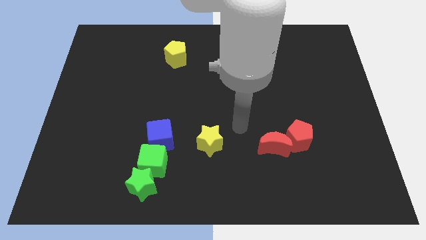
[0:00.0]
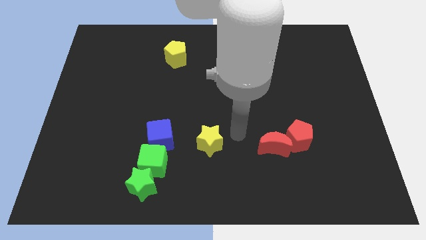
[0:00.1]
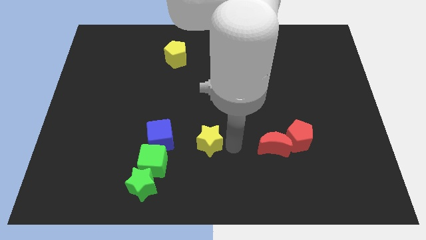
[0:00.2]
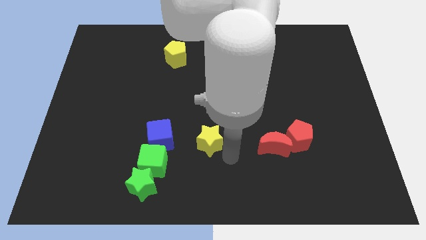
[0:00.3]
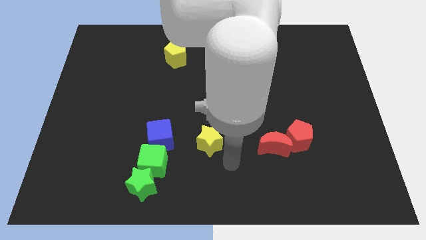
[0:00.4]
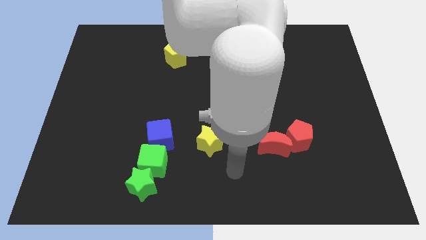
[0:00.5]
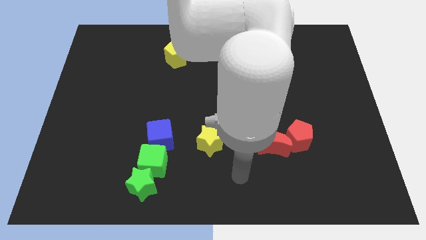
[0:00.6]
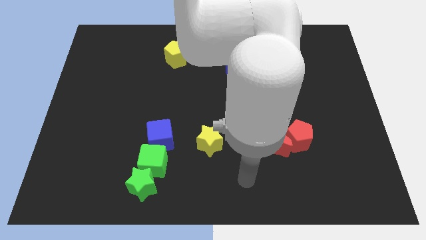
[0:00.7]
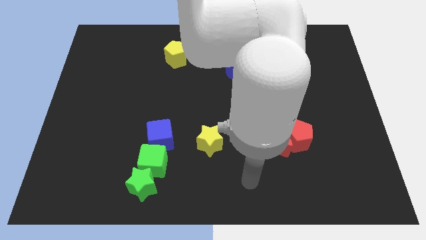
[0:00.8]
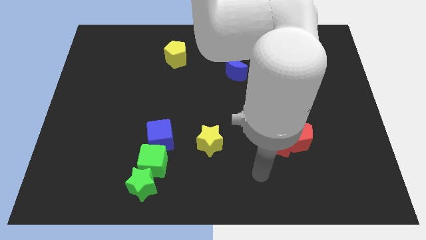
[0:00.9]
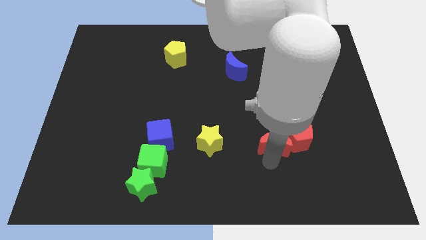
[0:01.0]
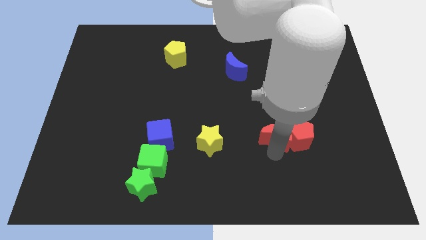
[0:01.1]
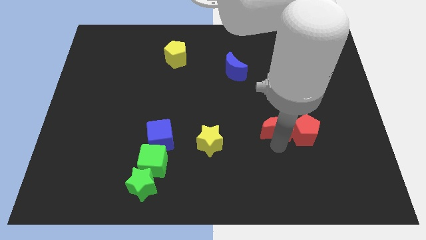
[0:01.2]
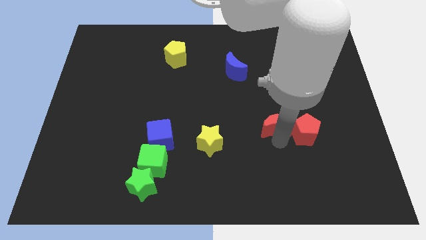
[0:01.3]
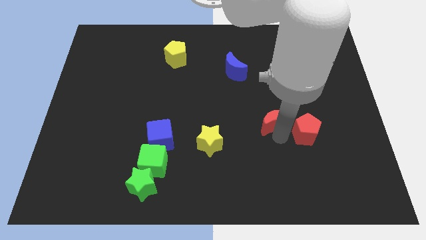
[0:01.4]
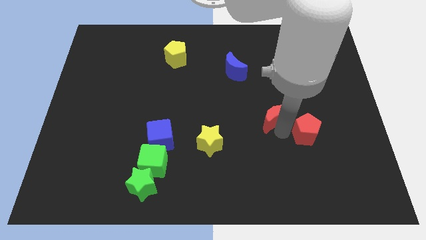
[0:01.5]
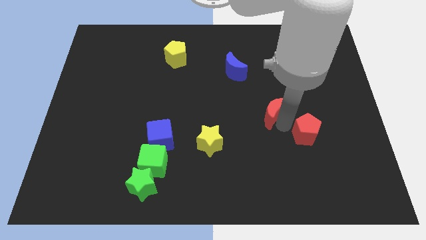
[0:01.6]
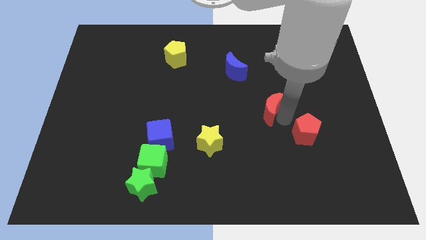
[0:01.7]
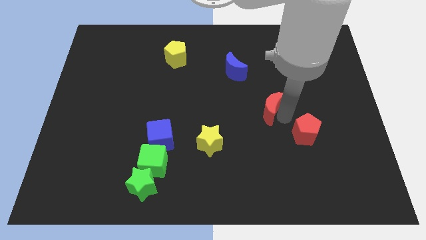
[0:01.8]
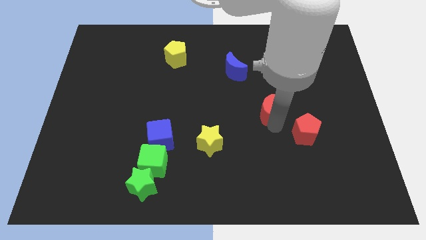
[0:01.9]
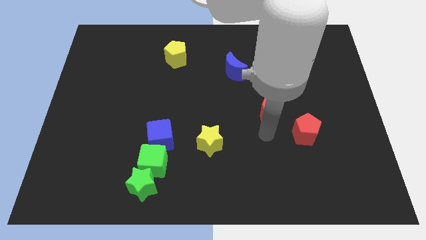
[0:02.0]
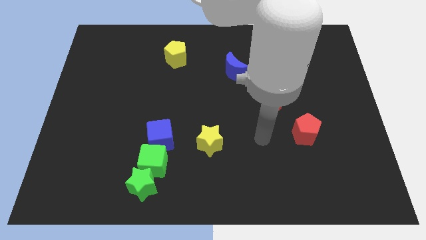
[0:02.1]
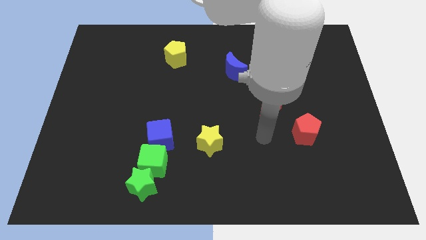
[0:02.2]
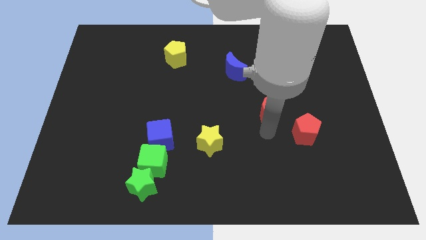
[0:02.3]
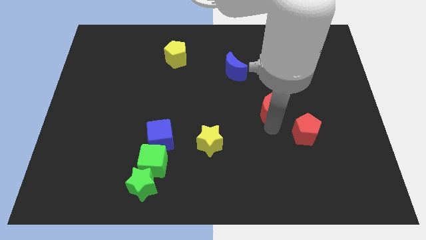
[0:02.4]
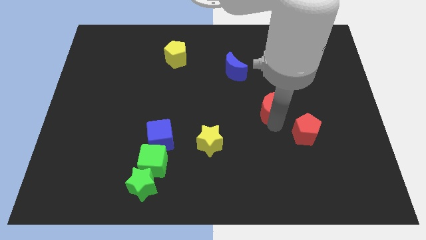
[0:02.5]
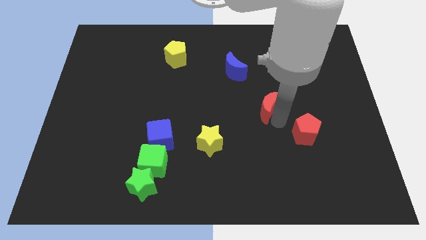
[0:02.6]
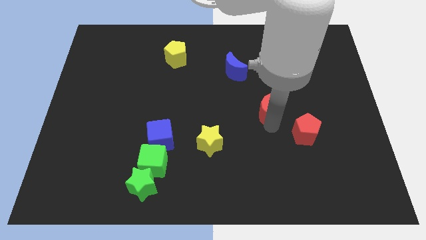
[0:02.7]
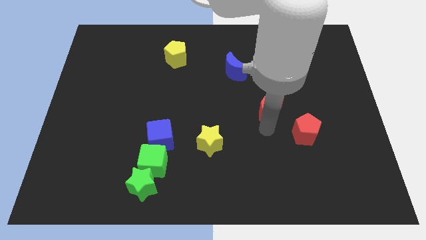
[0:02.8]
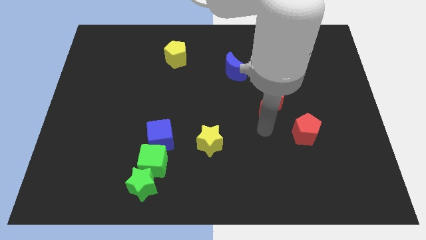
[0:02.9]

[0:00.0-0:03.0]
place the red moon between the red pentagon and blue moon

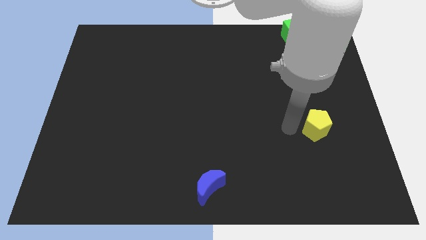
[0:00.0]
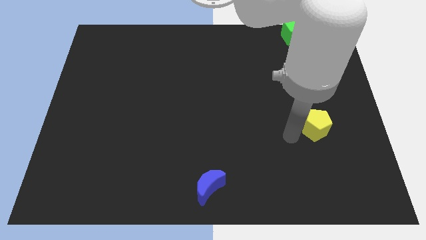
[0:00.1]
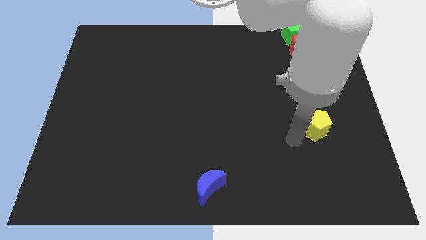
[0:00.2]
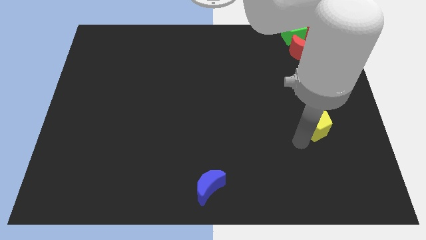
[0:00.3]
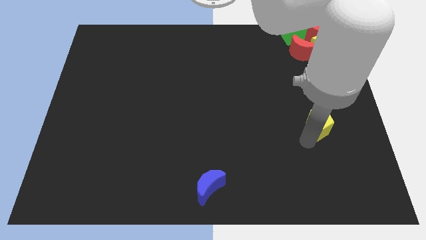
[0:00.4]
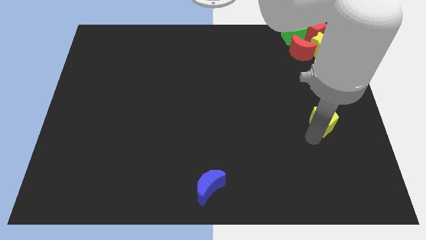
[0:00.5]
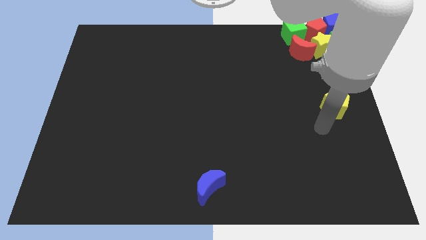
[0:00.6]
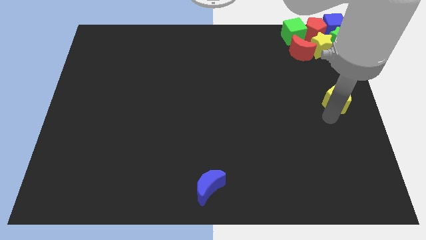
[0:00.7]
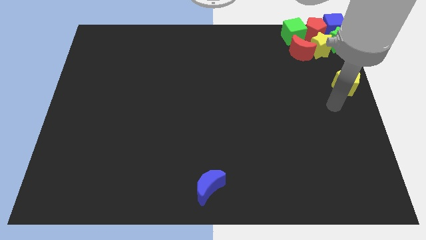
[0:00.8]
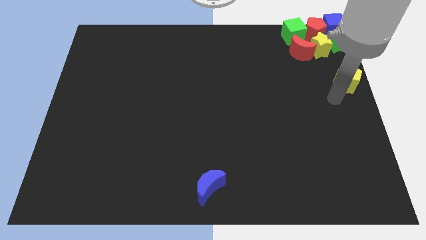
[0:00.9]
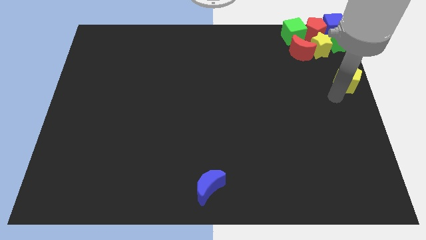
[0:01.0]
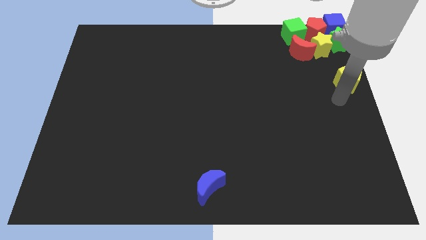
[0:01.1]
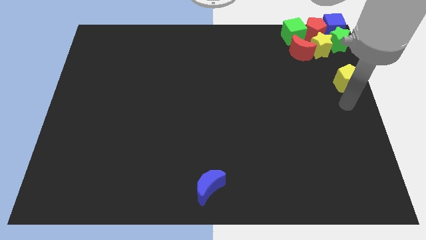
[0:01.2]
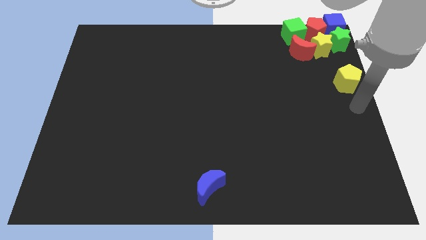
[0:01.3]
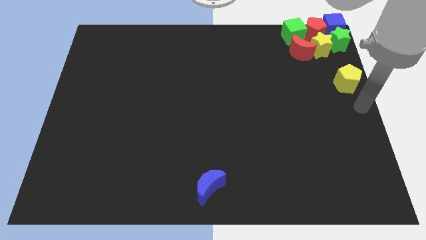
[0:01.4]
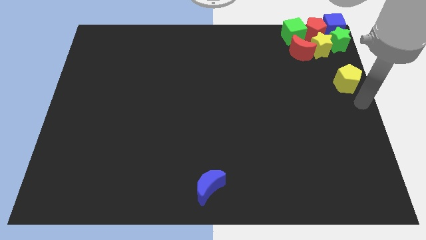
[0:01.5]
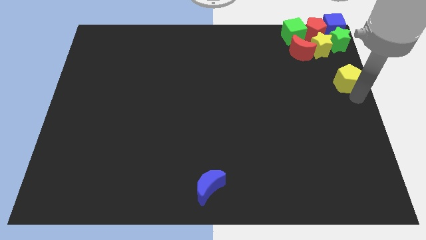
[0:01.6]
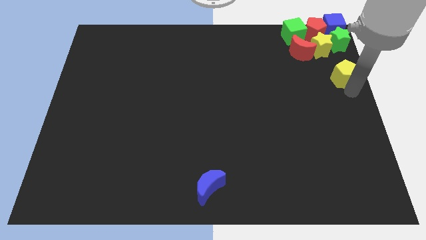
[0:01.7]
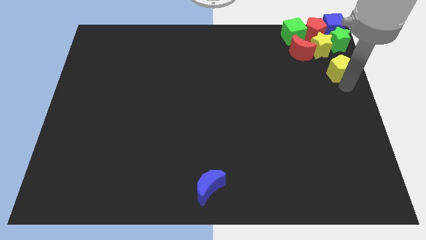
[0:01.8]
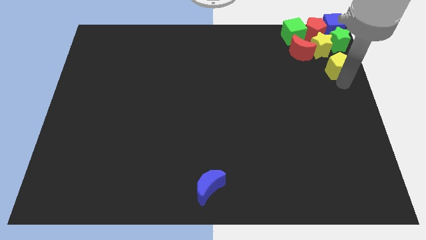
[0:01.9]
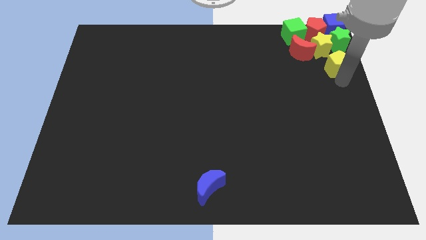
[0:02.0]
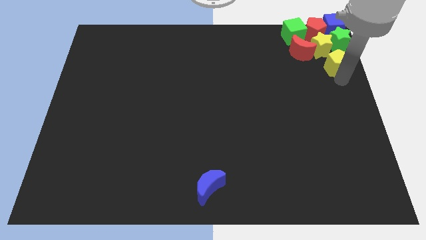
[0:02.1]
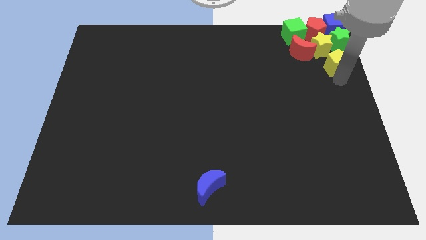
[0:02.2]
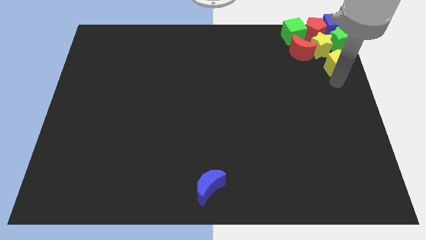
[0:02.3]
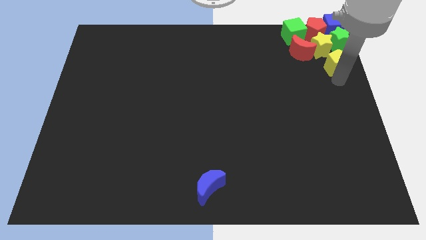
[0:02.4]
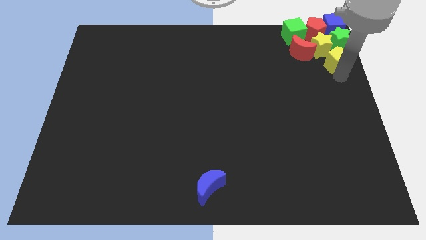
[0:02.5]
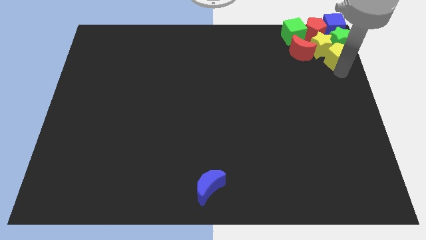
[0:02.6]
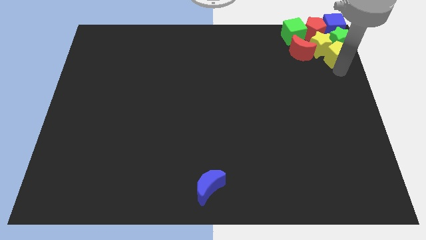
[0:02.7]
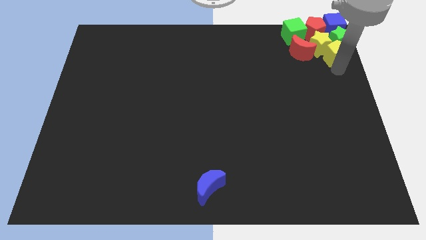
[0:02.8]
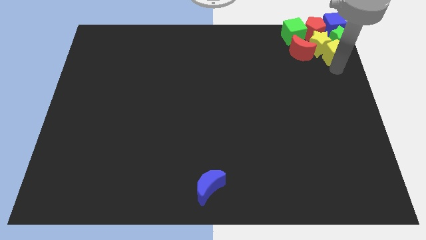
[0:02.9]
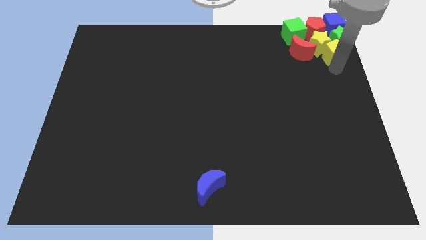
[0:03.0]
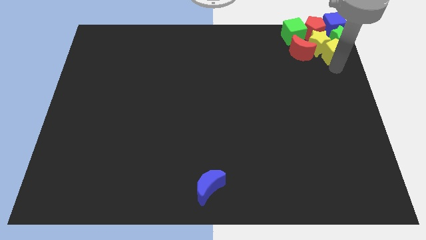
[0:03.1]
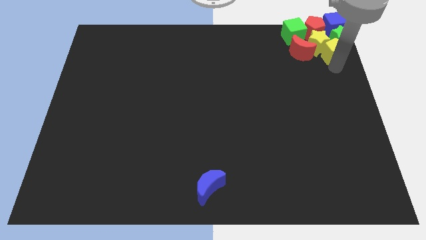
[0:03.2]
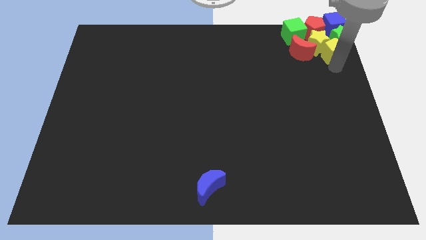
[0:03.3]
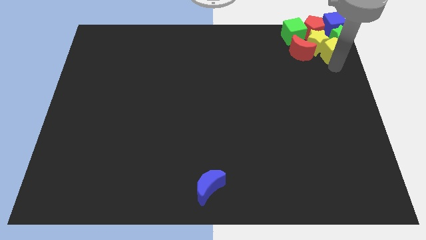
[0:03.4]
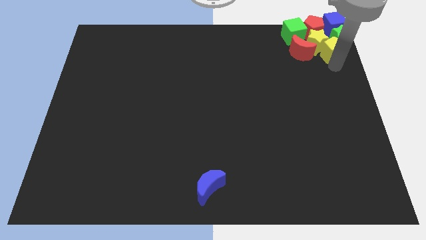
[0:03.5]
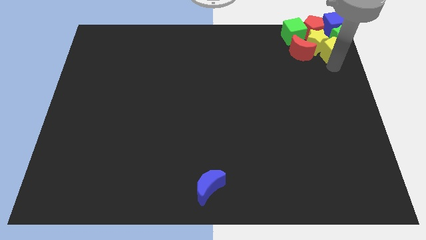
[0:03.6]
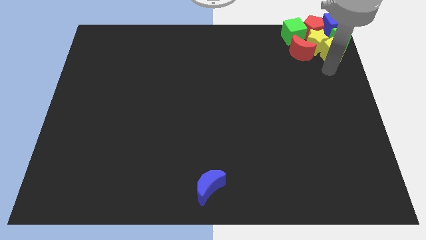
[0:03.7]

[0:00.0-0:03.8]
move the yellow pentagon into the yellow star

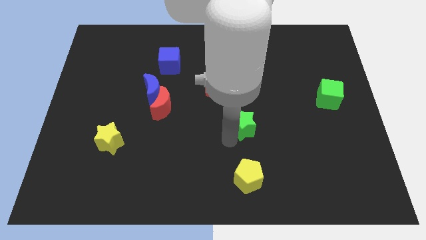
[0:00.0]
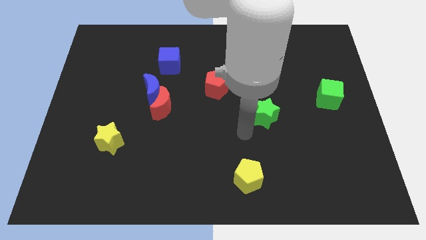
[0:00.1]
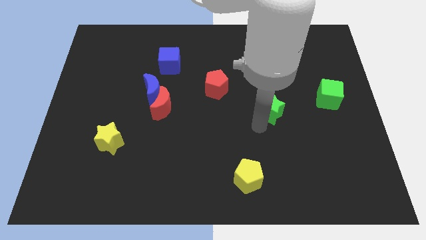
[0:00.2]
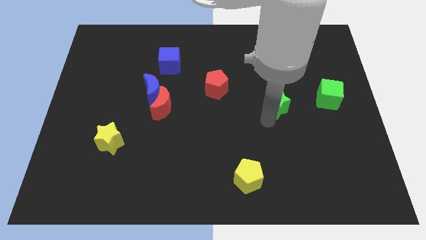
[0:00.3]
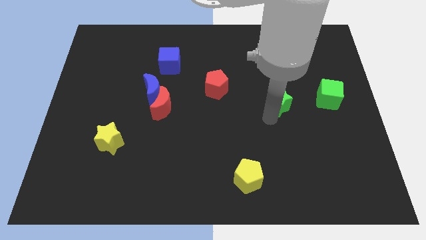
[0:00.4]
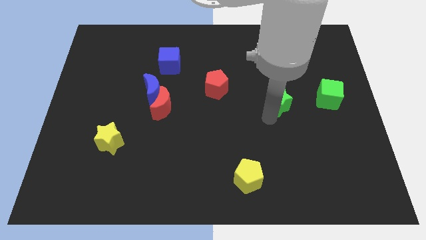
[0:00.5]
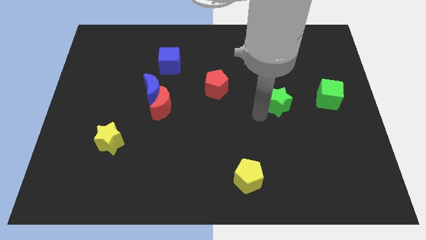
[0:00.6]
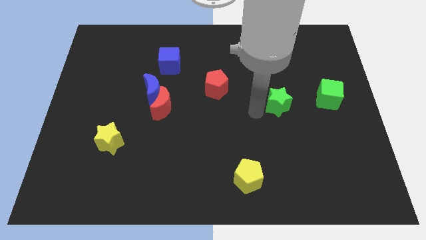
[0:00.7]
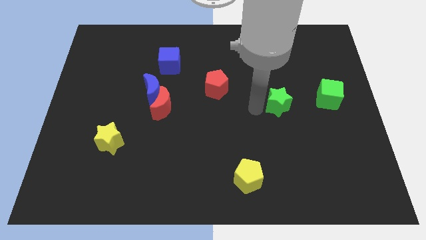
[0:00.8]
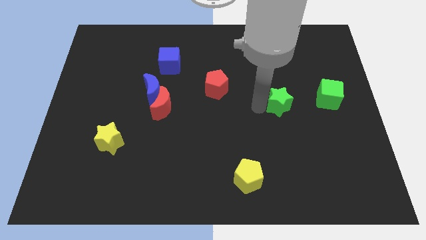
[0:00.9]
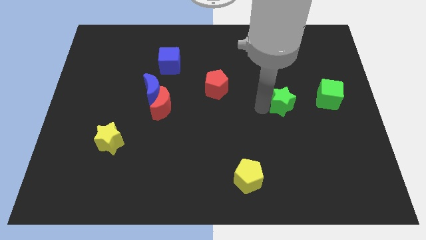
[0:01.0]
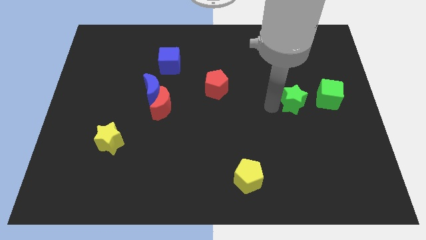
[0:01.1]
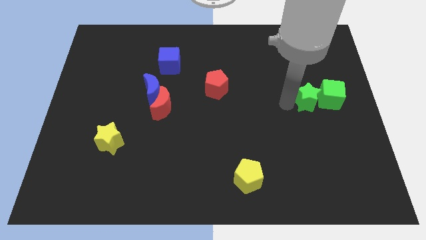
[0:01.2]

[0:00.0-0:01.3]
push the green star to the left of the green cube

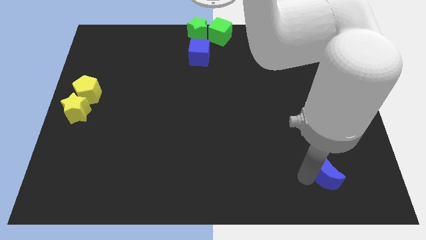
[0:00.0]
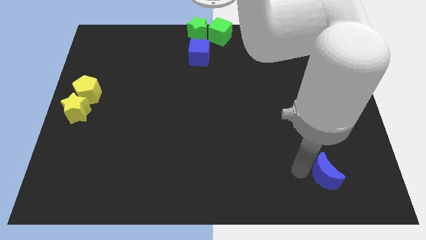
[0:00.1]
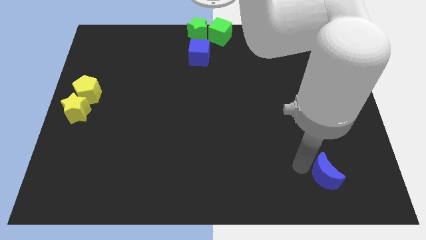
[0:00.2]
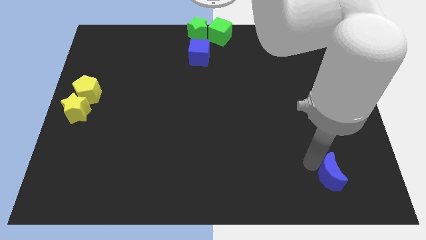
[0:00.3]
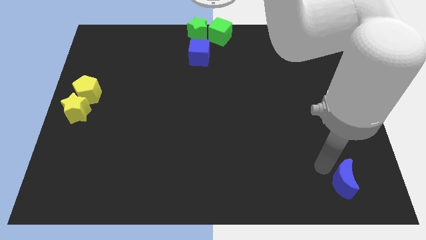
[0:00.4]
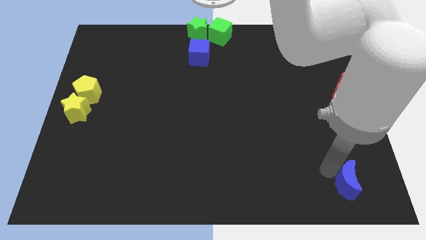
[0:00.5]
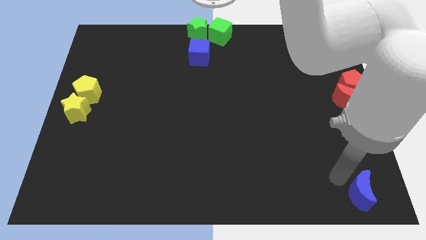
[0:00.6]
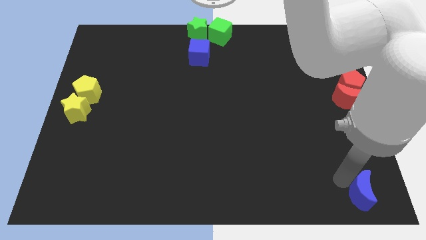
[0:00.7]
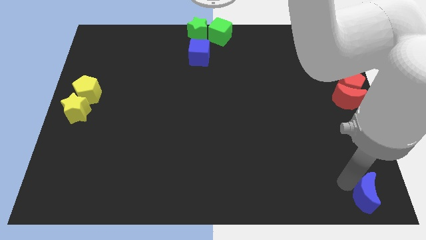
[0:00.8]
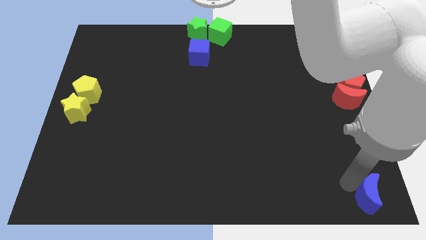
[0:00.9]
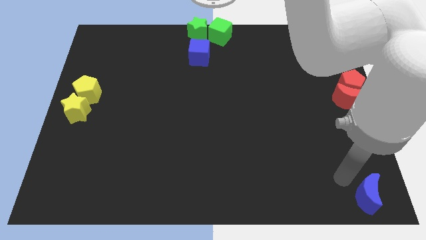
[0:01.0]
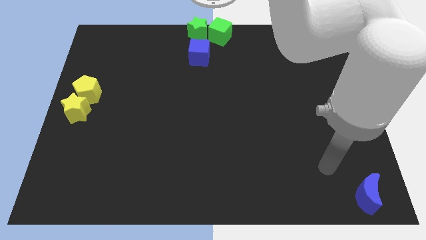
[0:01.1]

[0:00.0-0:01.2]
push the blue moon towards the right side of the board

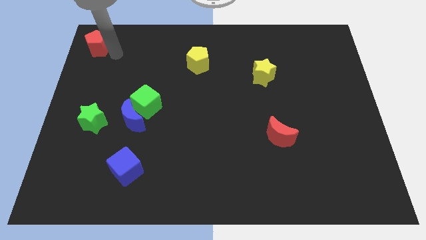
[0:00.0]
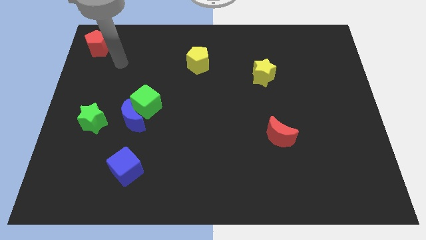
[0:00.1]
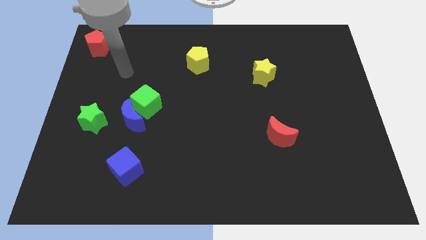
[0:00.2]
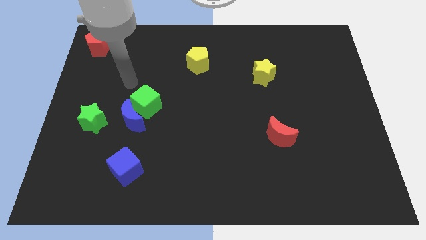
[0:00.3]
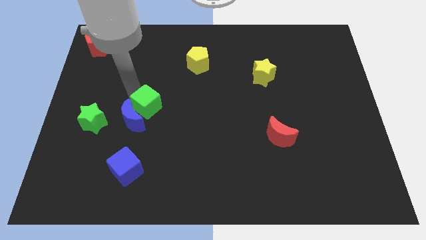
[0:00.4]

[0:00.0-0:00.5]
place your arm at the top left side of green cube
